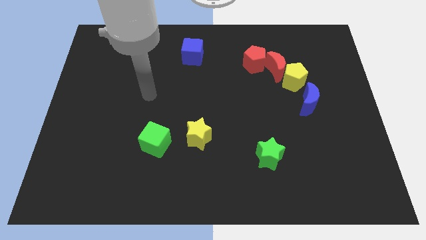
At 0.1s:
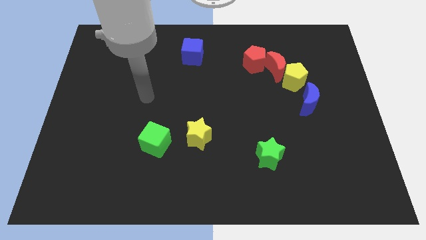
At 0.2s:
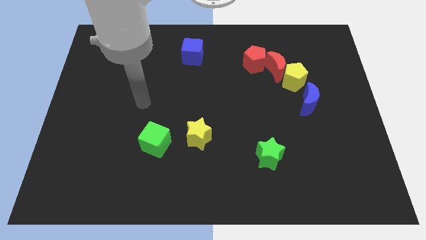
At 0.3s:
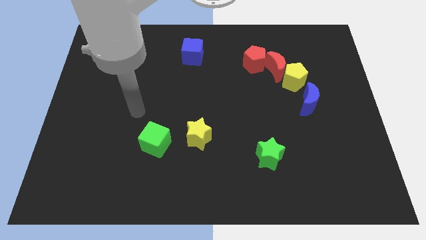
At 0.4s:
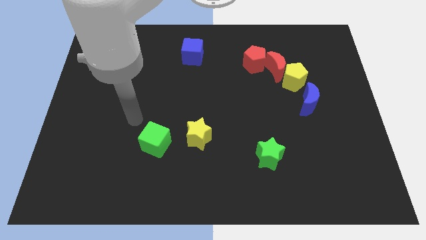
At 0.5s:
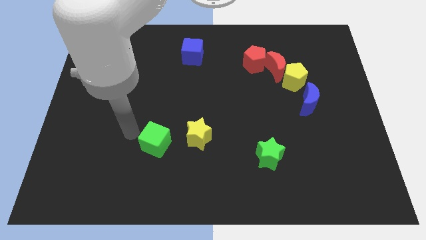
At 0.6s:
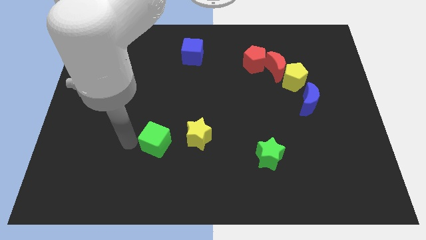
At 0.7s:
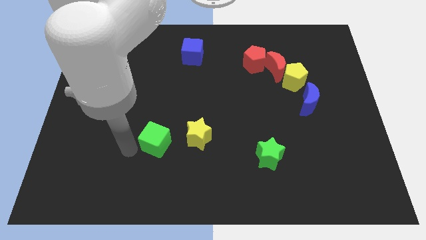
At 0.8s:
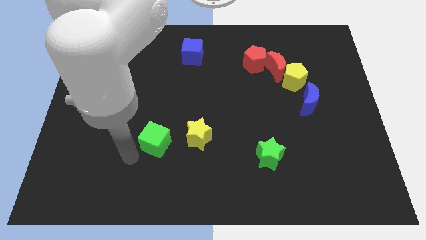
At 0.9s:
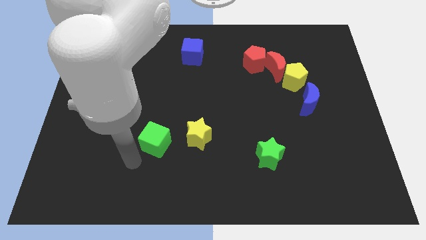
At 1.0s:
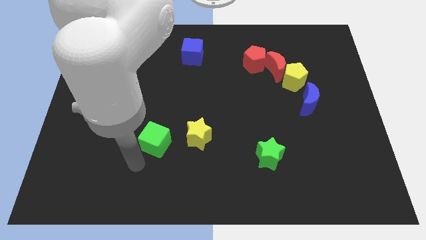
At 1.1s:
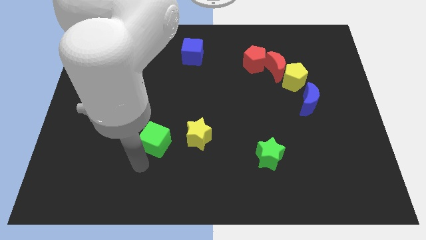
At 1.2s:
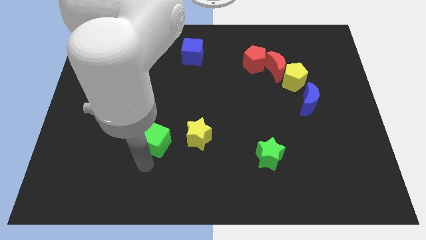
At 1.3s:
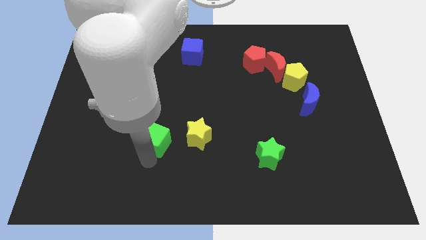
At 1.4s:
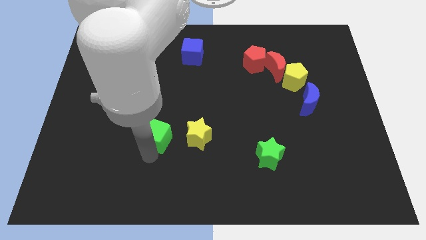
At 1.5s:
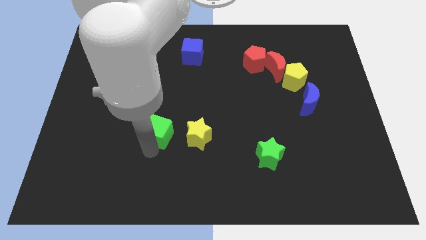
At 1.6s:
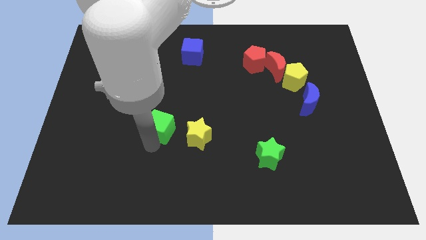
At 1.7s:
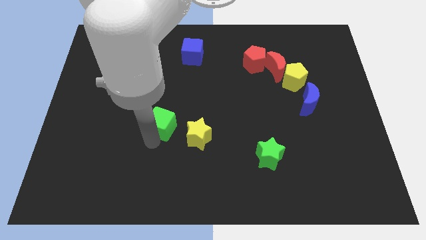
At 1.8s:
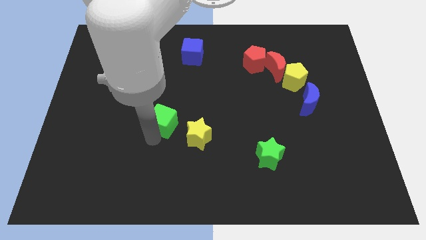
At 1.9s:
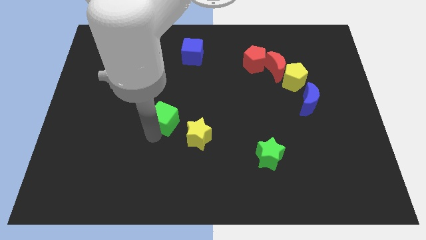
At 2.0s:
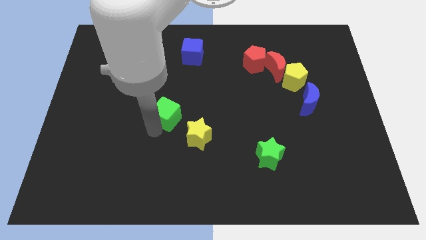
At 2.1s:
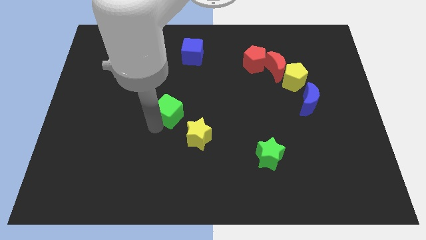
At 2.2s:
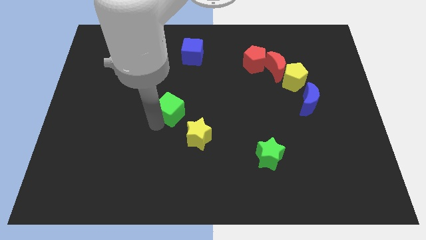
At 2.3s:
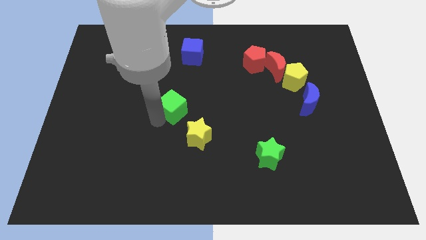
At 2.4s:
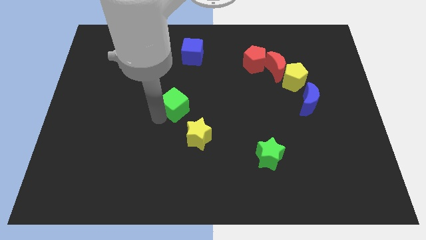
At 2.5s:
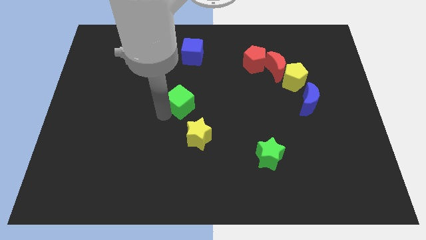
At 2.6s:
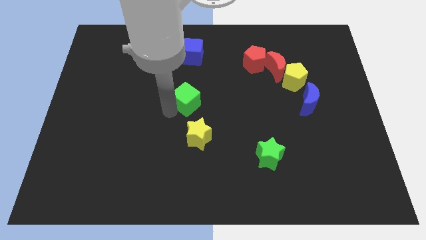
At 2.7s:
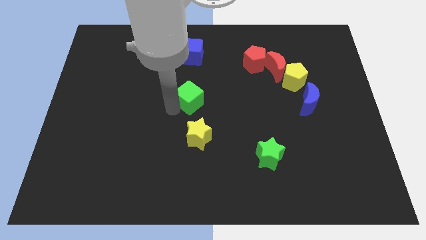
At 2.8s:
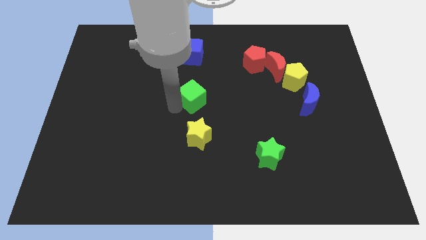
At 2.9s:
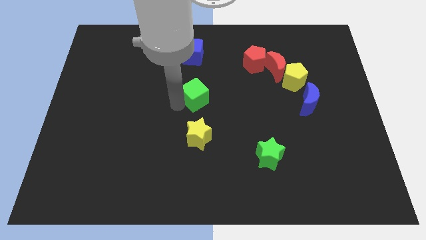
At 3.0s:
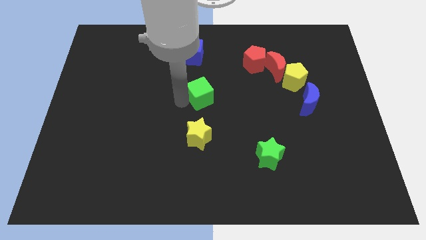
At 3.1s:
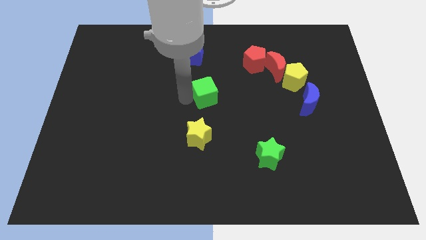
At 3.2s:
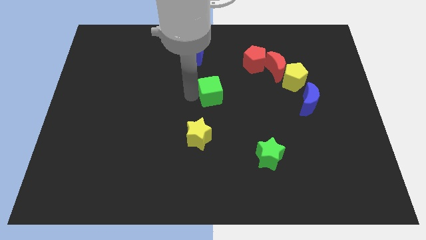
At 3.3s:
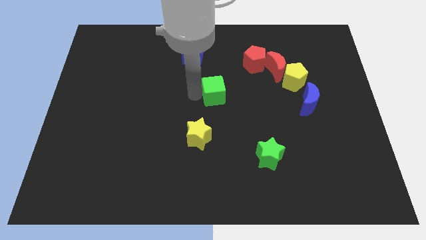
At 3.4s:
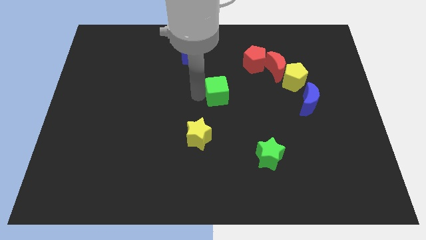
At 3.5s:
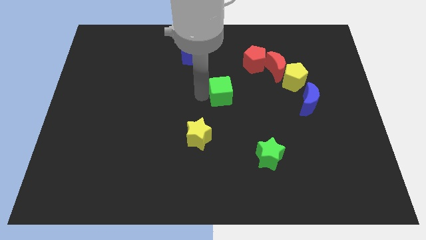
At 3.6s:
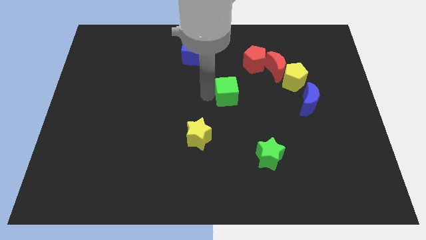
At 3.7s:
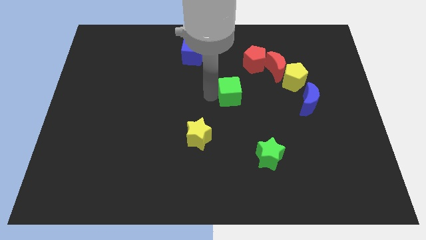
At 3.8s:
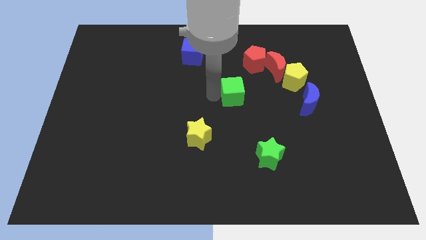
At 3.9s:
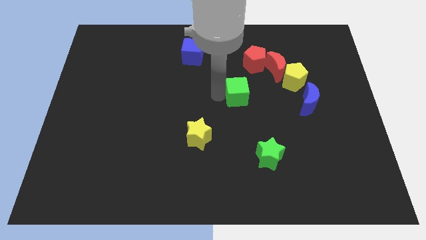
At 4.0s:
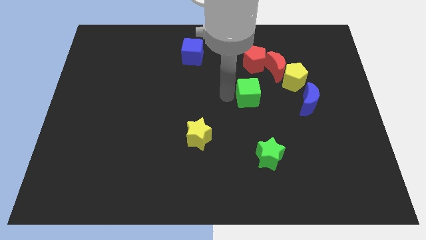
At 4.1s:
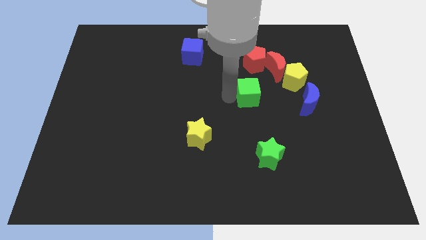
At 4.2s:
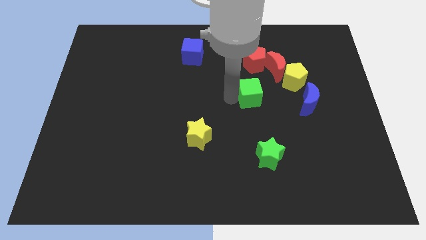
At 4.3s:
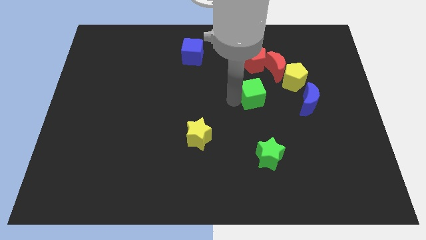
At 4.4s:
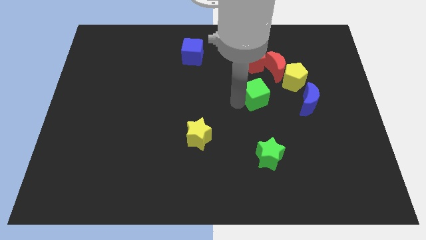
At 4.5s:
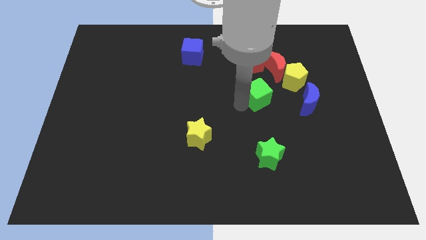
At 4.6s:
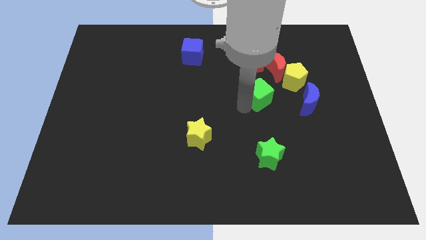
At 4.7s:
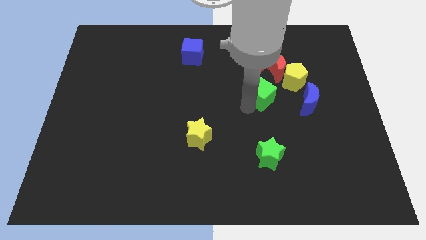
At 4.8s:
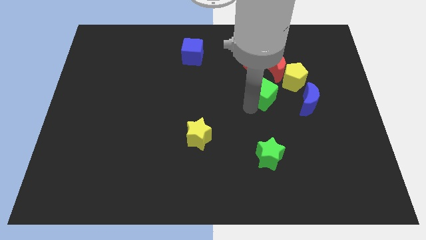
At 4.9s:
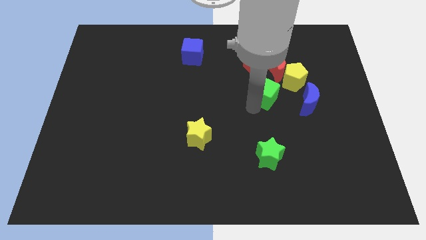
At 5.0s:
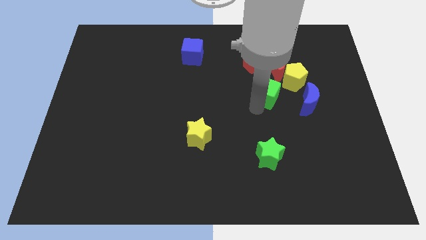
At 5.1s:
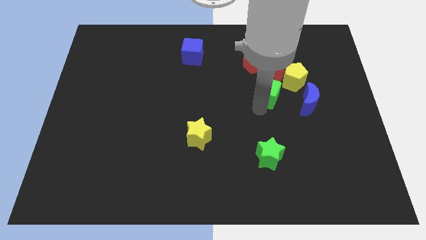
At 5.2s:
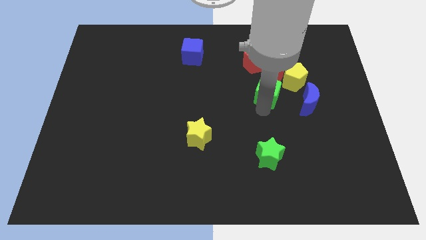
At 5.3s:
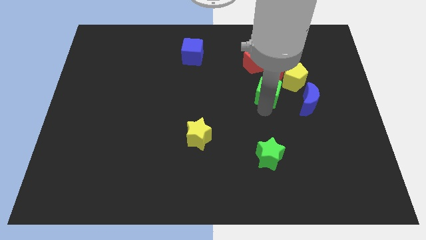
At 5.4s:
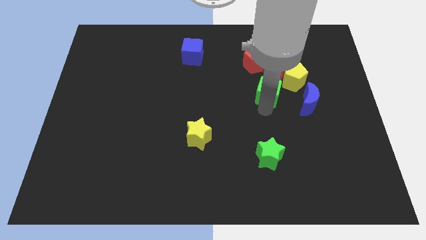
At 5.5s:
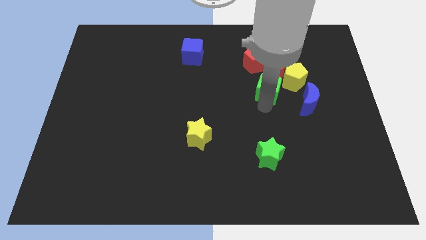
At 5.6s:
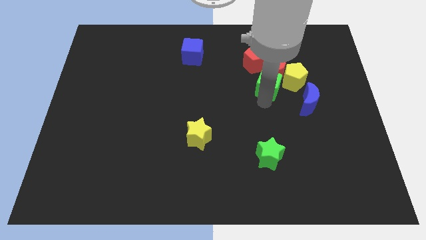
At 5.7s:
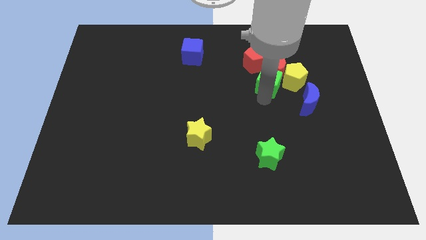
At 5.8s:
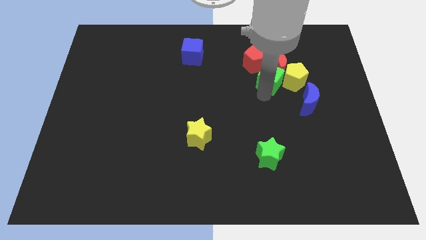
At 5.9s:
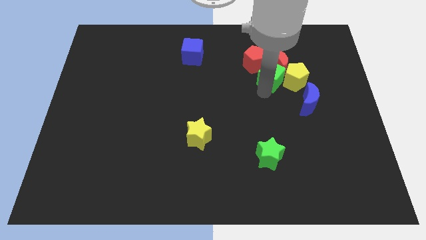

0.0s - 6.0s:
move the green cube close to the red moon

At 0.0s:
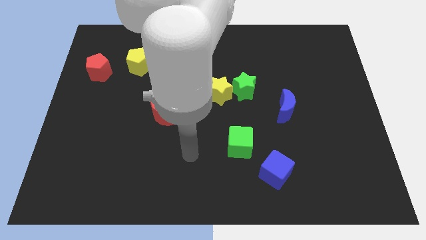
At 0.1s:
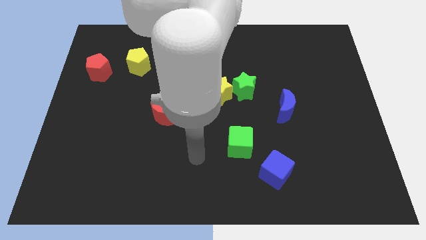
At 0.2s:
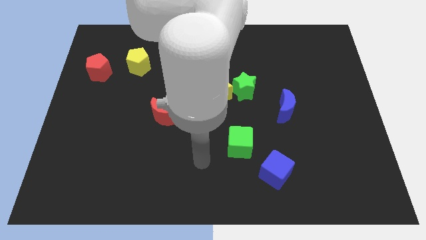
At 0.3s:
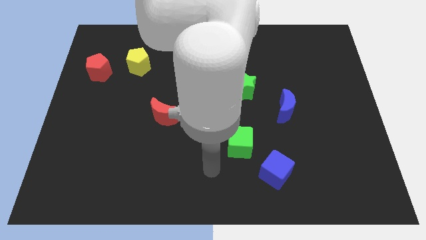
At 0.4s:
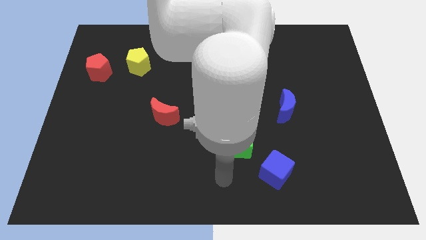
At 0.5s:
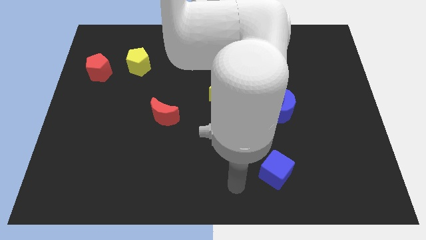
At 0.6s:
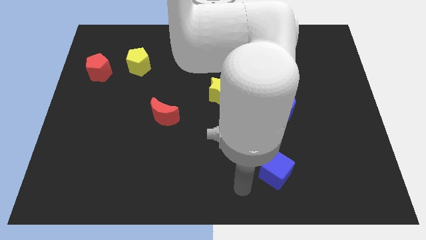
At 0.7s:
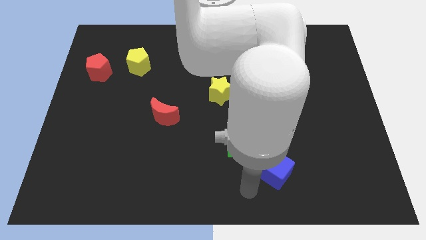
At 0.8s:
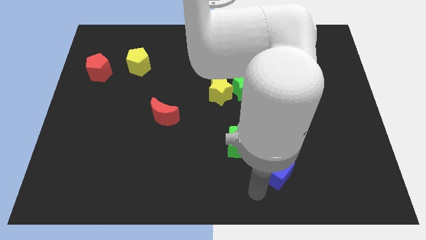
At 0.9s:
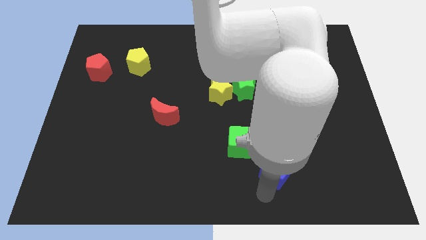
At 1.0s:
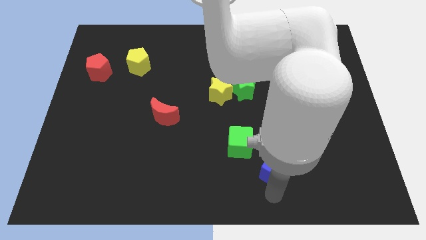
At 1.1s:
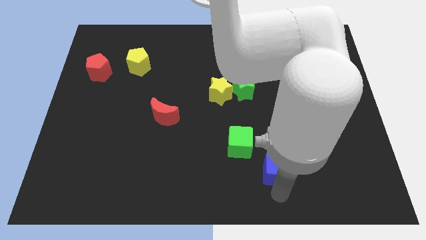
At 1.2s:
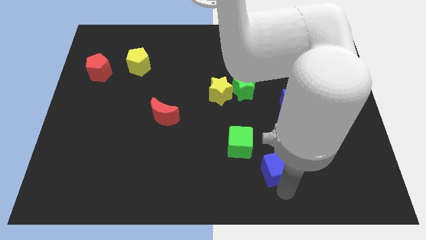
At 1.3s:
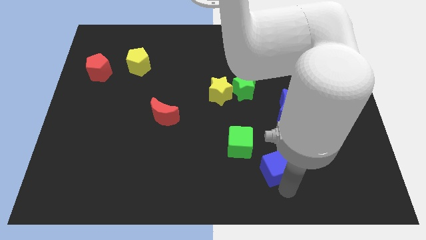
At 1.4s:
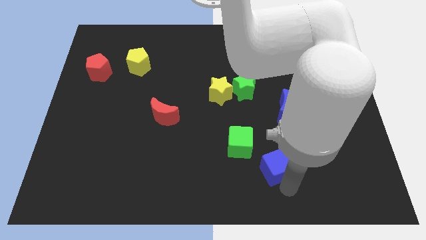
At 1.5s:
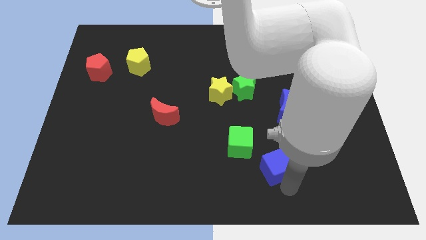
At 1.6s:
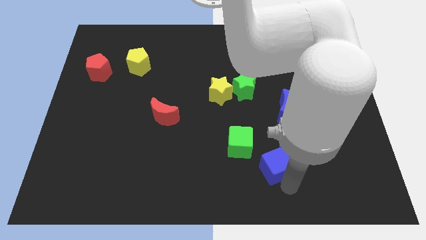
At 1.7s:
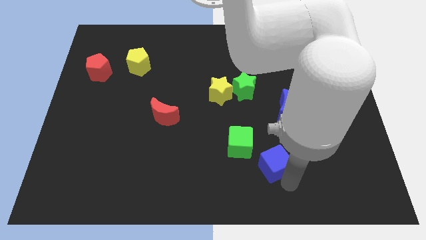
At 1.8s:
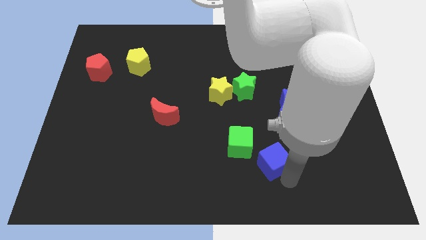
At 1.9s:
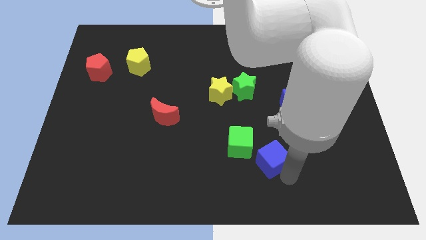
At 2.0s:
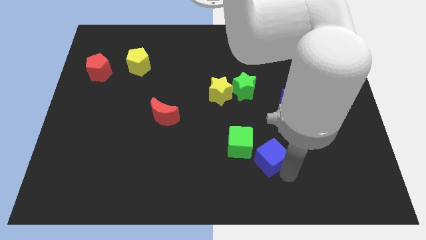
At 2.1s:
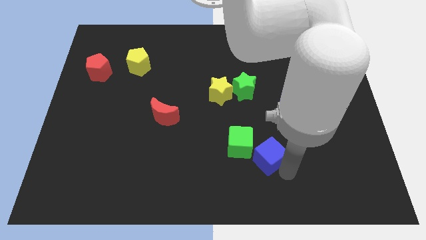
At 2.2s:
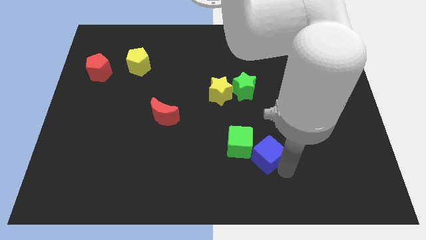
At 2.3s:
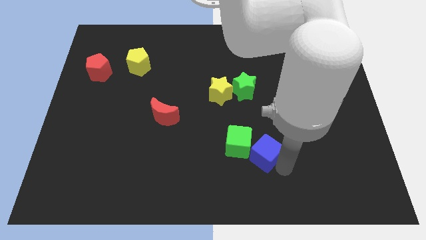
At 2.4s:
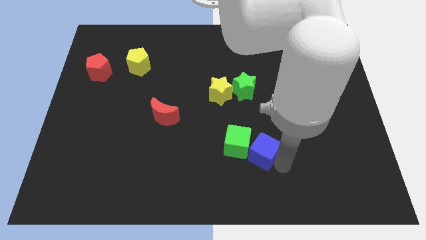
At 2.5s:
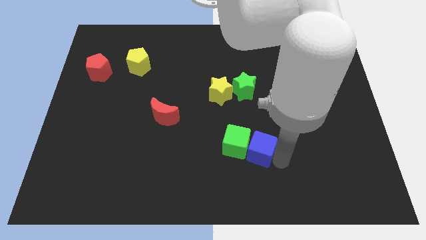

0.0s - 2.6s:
push the blue cube towards the green cube
